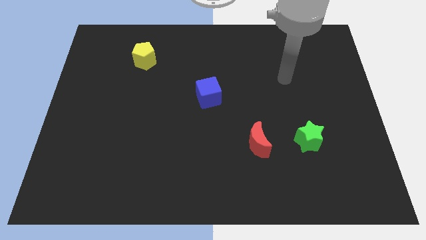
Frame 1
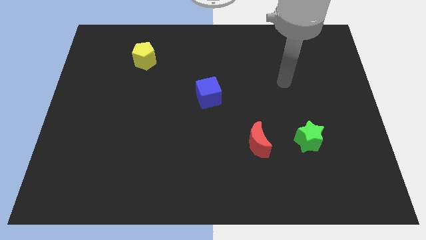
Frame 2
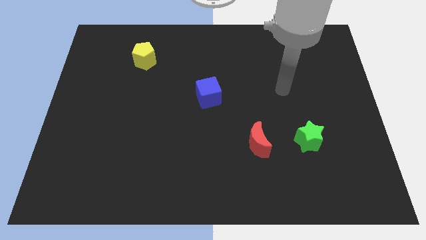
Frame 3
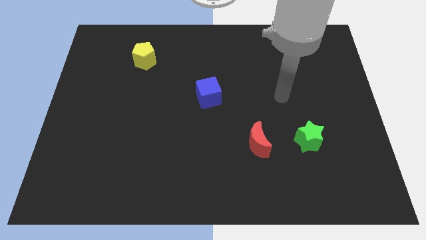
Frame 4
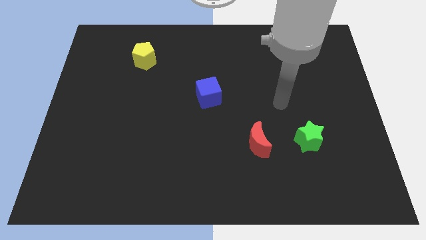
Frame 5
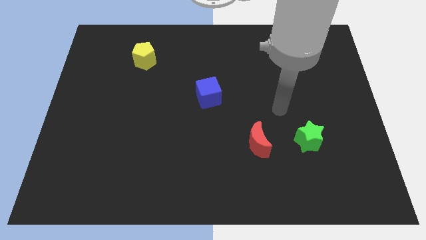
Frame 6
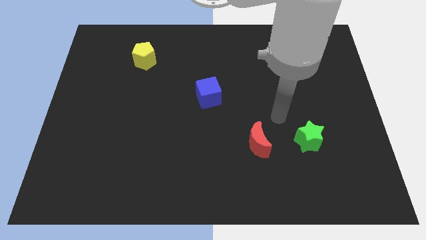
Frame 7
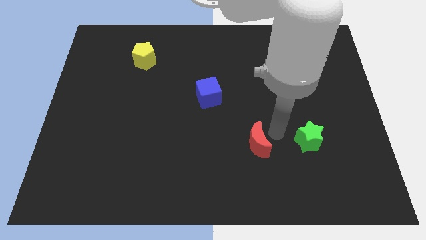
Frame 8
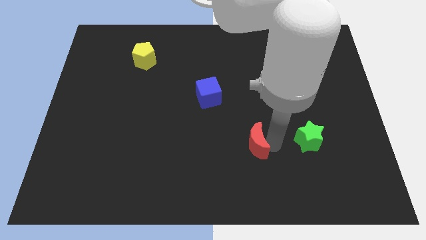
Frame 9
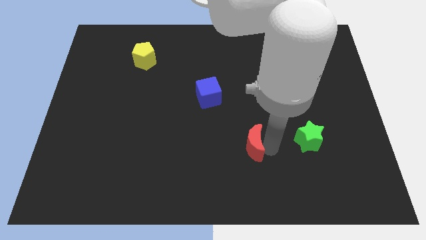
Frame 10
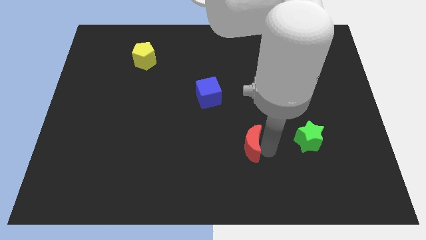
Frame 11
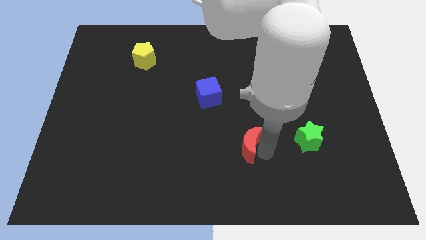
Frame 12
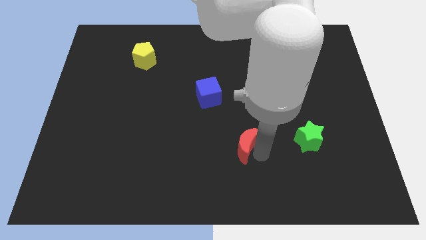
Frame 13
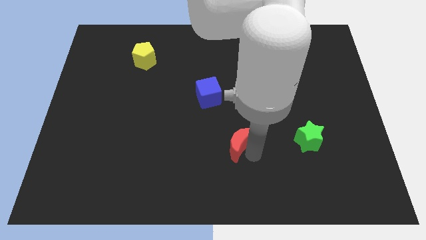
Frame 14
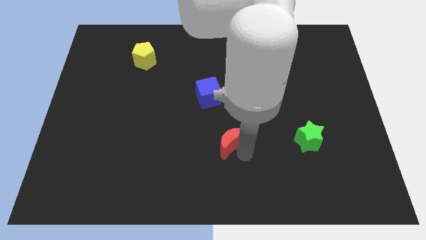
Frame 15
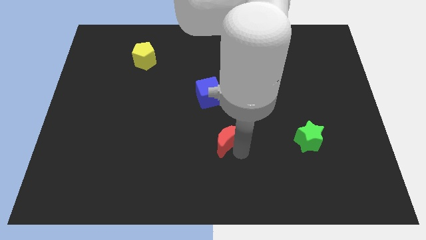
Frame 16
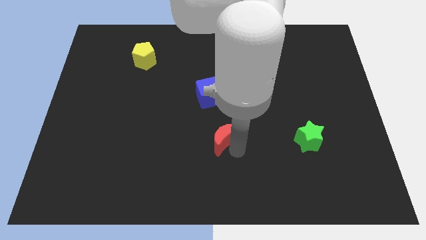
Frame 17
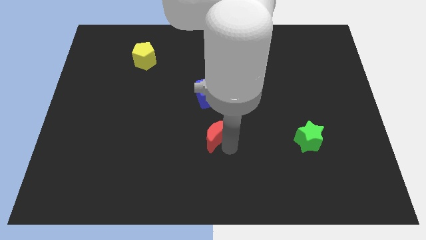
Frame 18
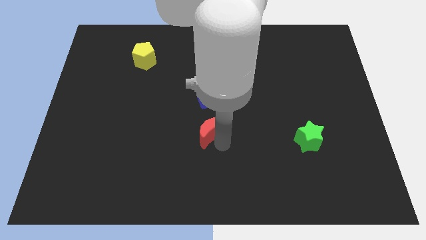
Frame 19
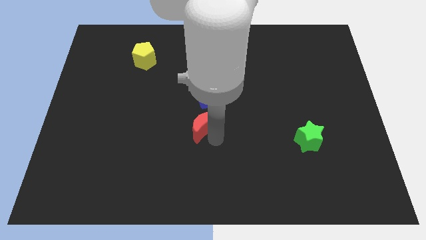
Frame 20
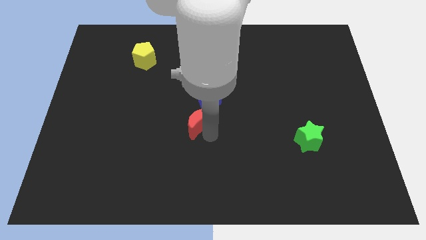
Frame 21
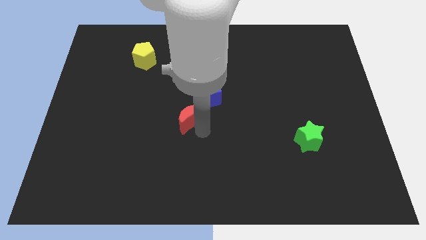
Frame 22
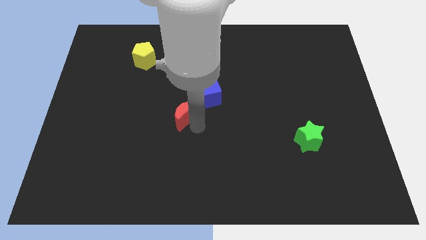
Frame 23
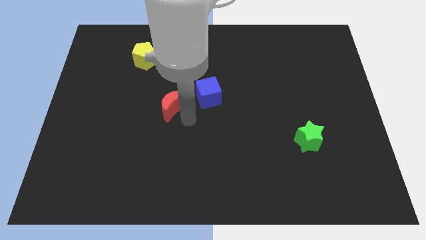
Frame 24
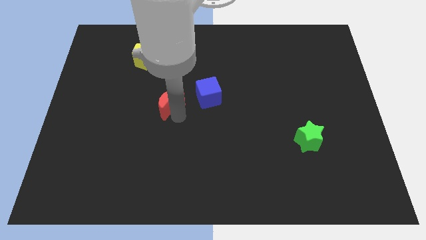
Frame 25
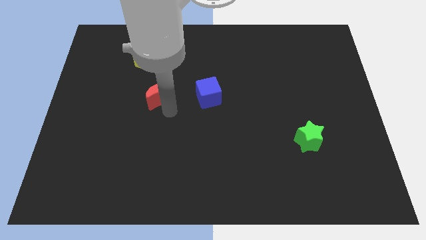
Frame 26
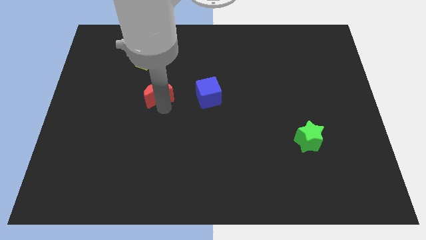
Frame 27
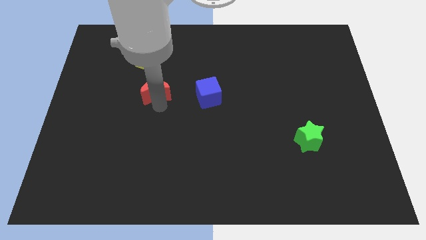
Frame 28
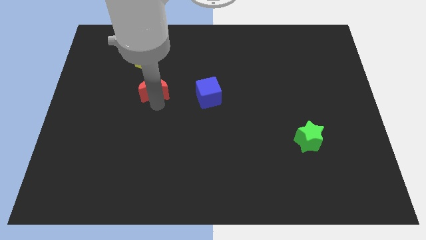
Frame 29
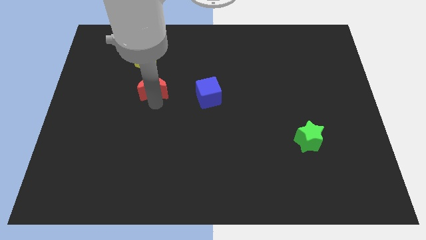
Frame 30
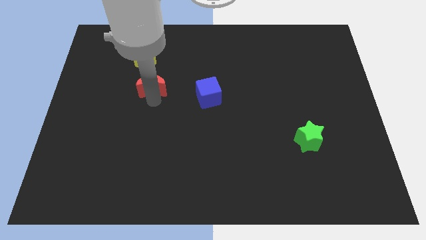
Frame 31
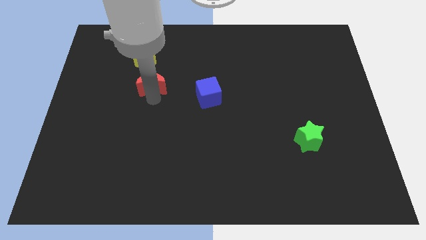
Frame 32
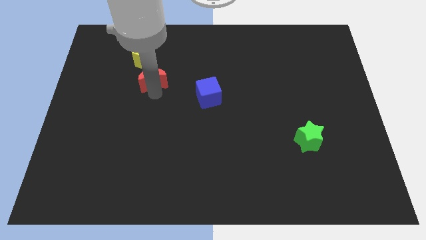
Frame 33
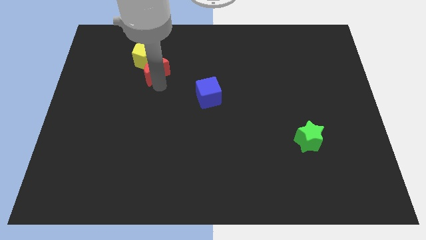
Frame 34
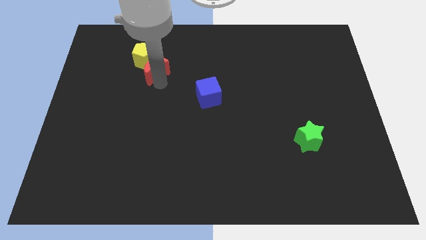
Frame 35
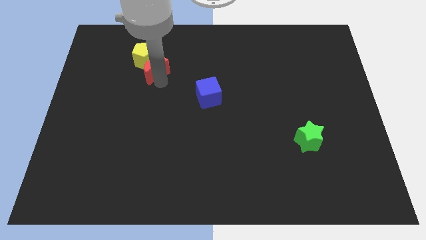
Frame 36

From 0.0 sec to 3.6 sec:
slide the moon close to the yellow block

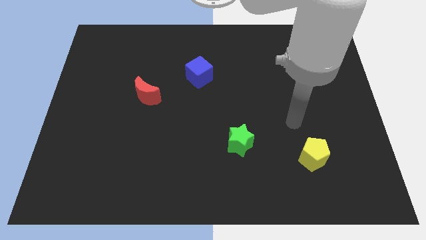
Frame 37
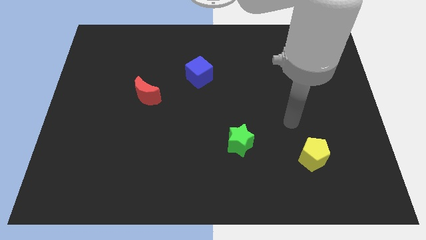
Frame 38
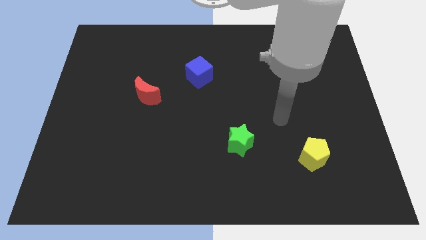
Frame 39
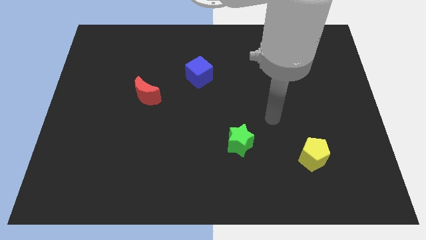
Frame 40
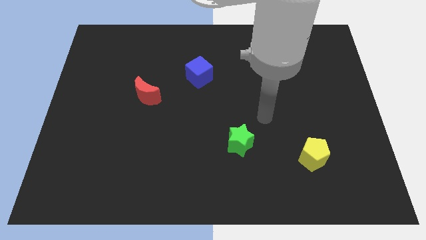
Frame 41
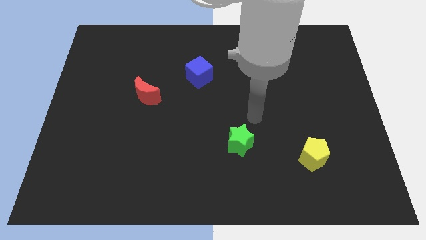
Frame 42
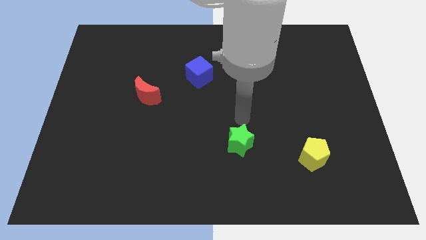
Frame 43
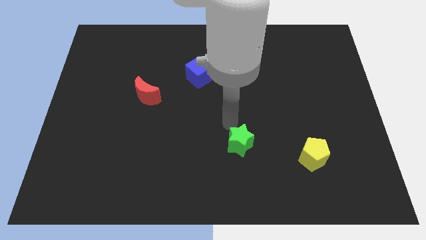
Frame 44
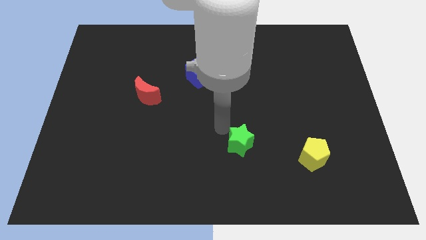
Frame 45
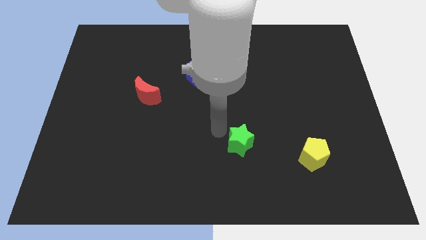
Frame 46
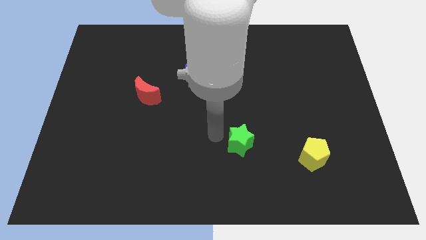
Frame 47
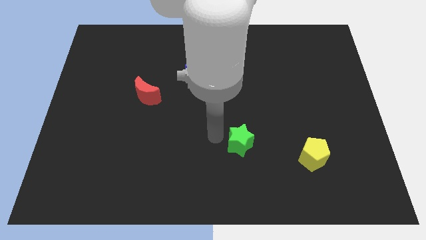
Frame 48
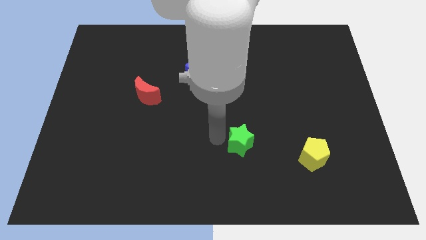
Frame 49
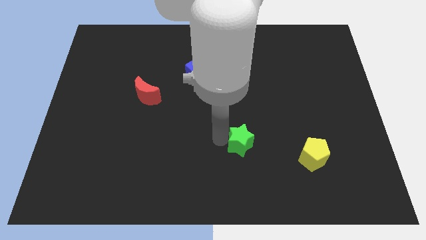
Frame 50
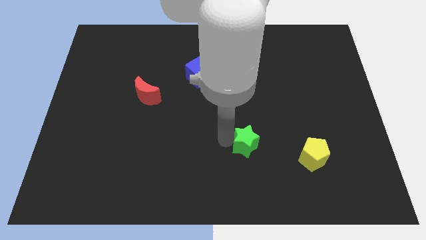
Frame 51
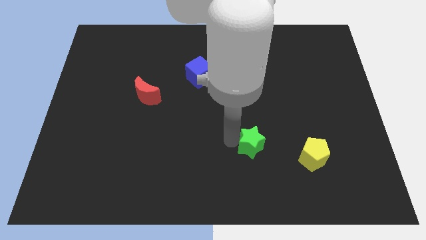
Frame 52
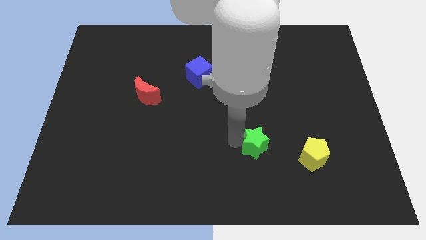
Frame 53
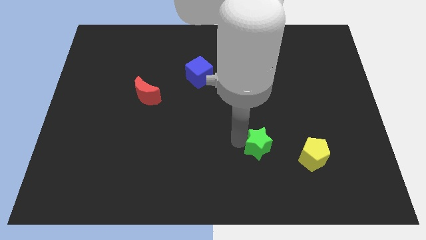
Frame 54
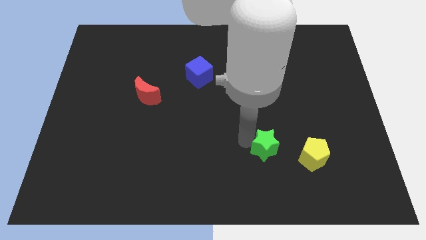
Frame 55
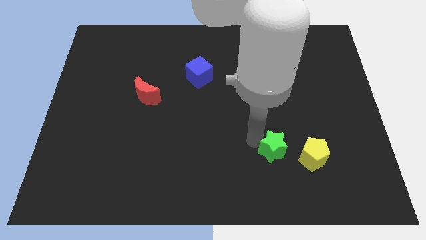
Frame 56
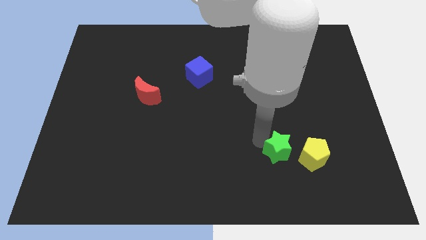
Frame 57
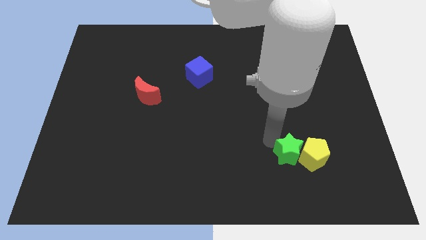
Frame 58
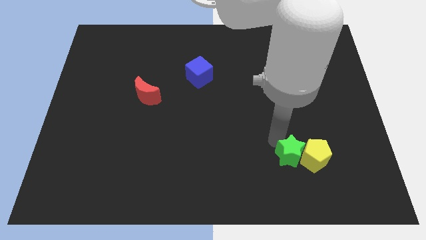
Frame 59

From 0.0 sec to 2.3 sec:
push the star next to the yellow pentagon

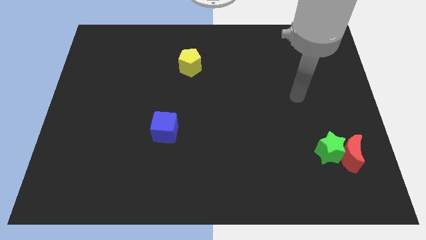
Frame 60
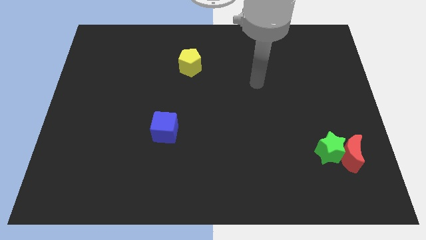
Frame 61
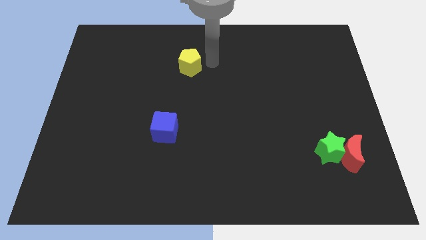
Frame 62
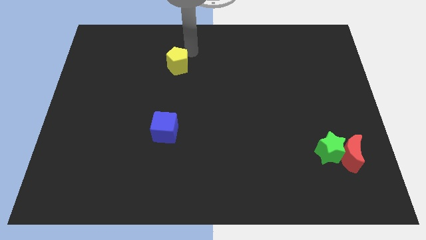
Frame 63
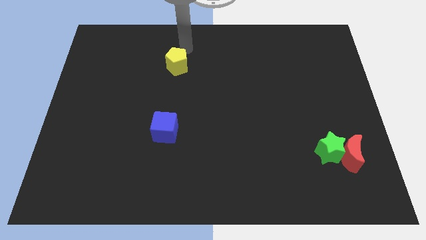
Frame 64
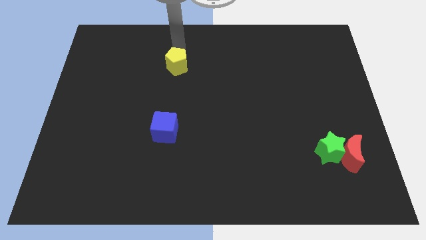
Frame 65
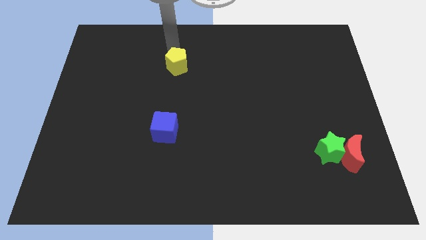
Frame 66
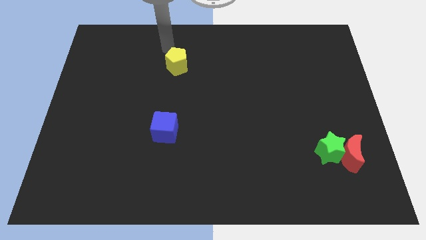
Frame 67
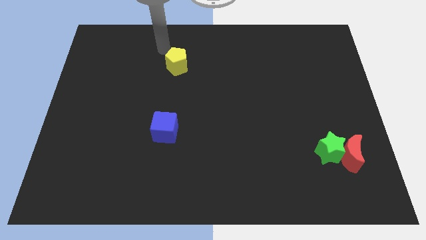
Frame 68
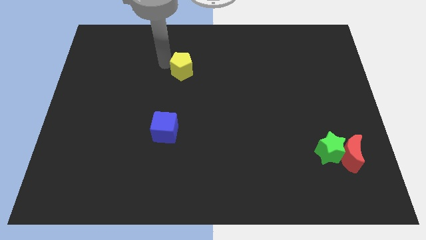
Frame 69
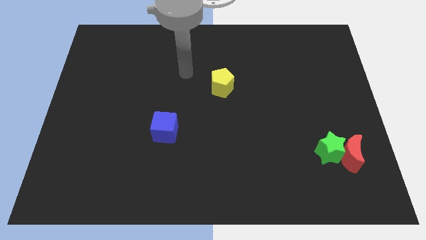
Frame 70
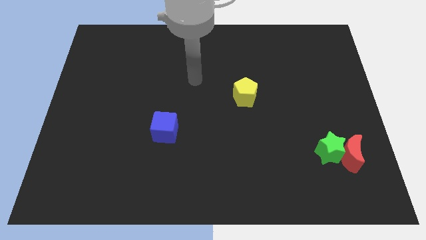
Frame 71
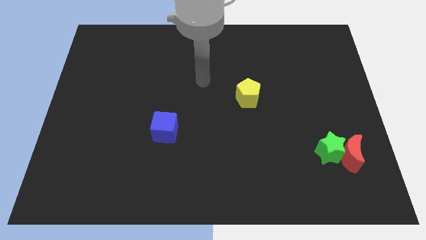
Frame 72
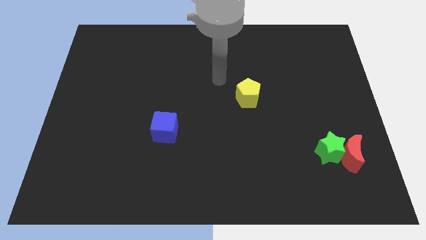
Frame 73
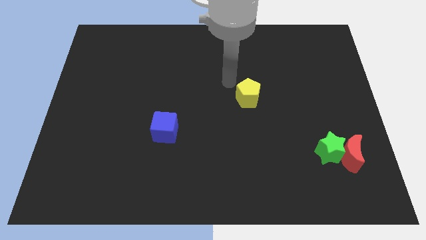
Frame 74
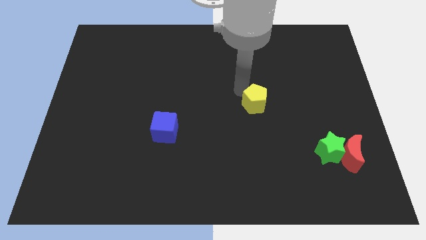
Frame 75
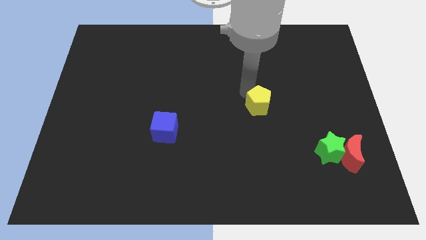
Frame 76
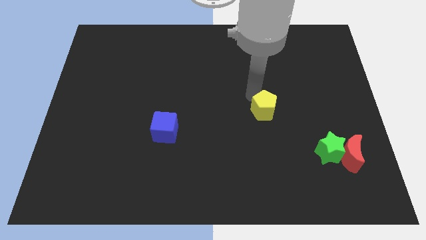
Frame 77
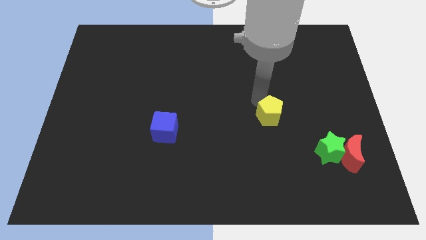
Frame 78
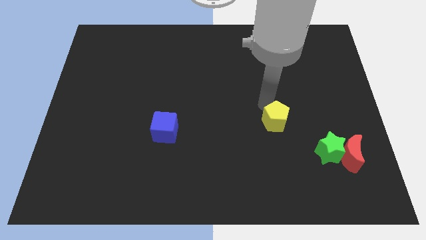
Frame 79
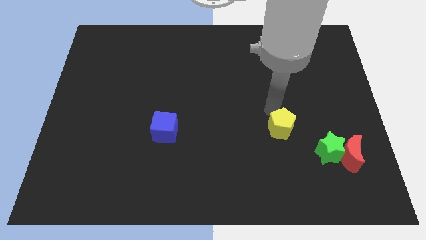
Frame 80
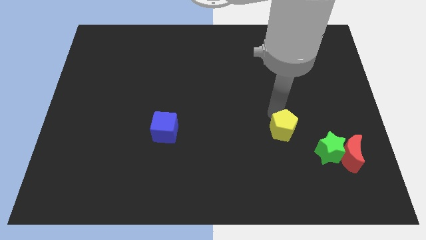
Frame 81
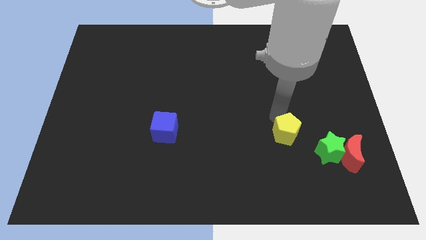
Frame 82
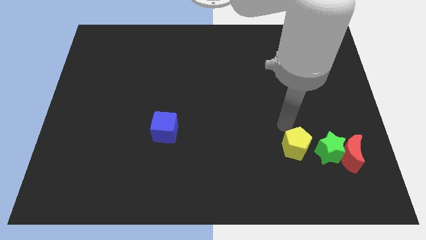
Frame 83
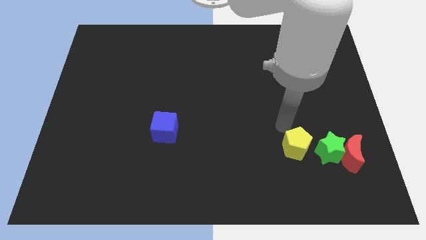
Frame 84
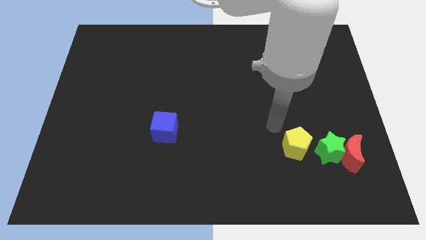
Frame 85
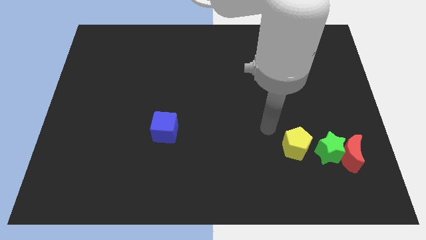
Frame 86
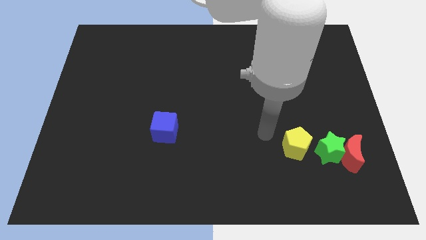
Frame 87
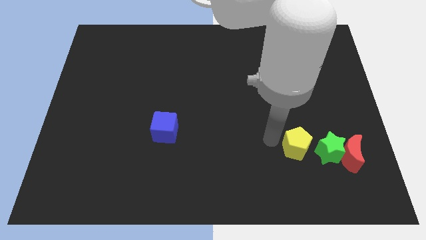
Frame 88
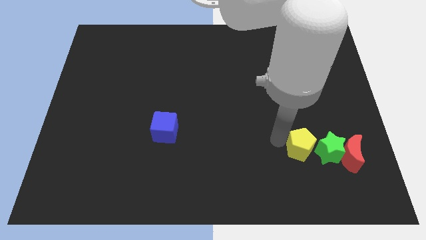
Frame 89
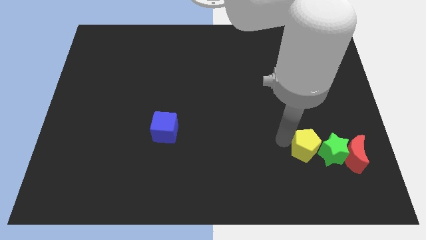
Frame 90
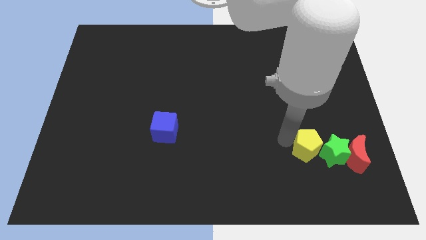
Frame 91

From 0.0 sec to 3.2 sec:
push the yellow block next to the green star
